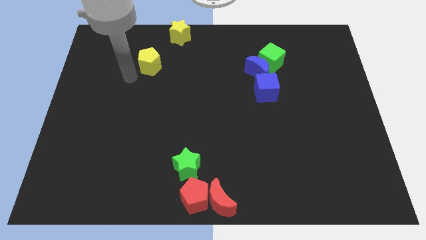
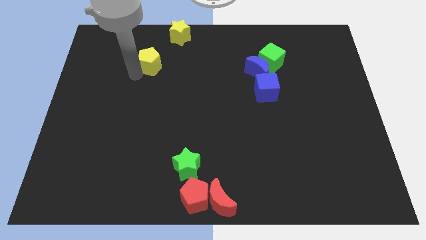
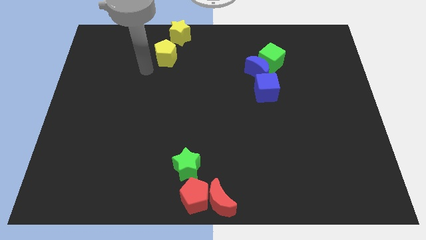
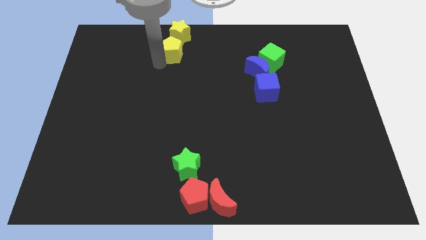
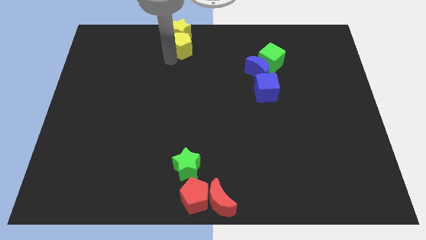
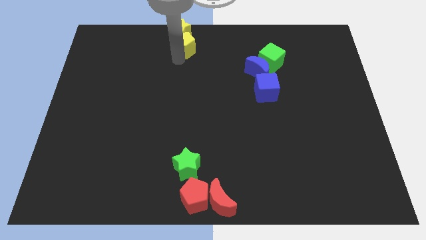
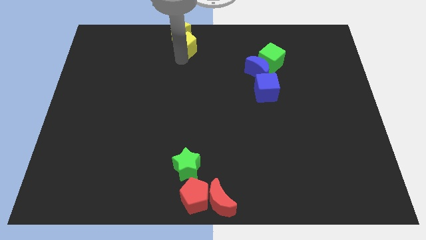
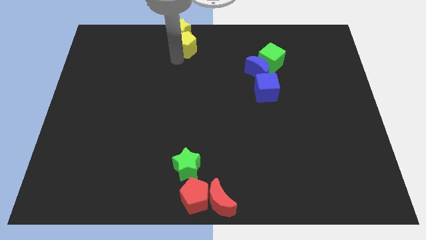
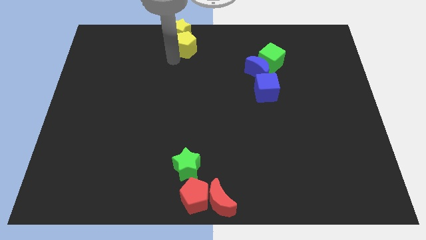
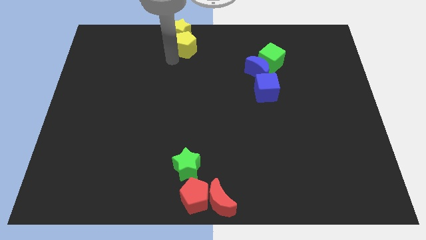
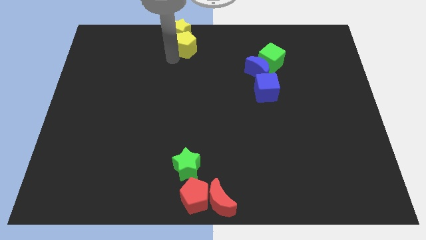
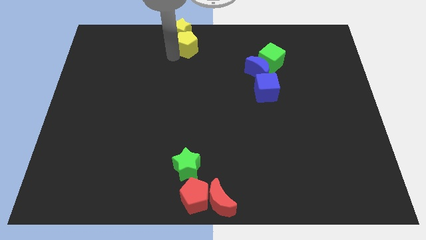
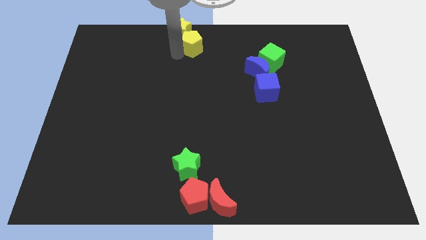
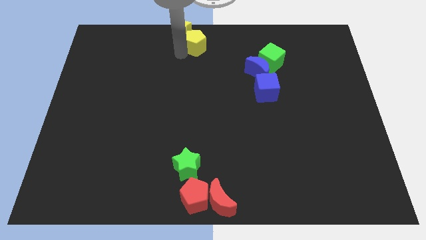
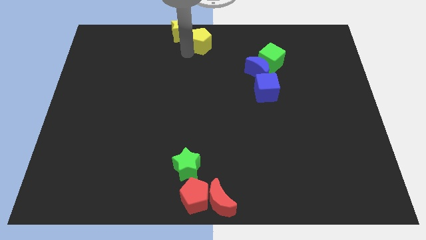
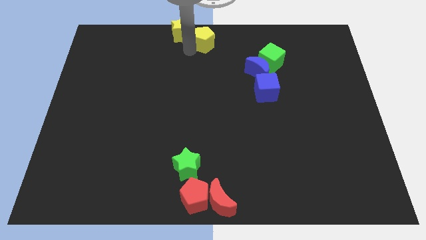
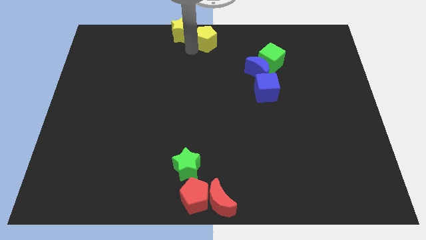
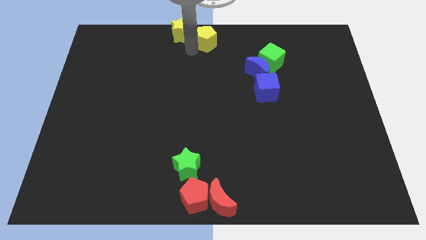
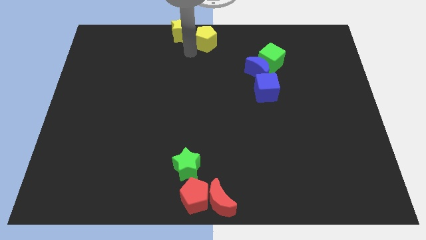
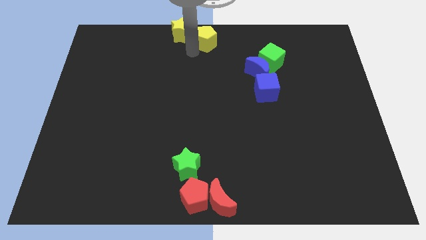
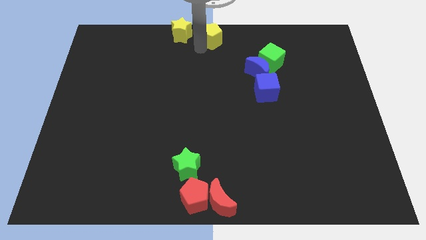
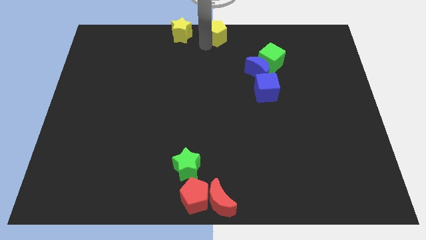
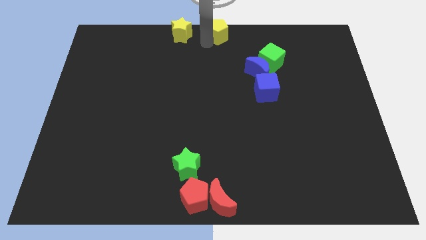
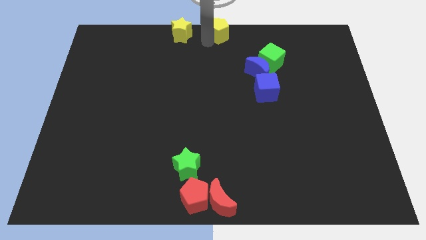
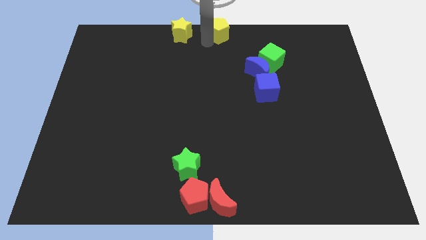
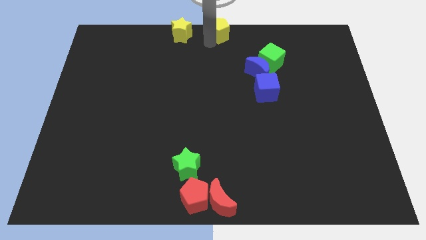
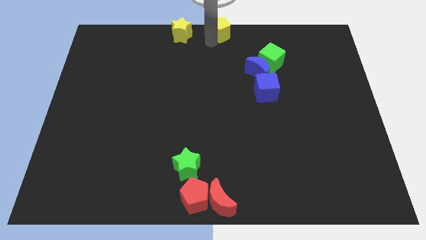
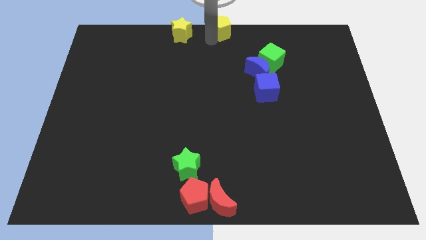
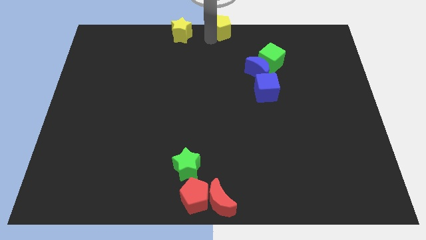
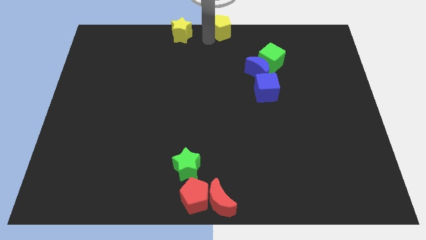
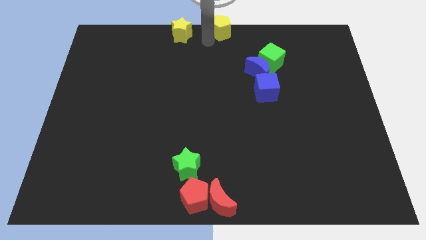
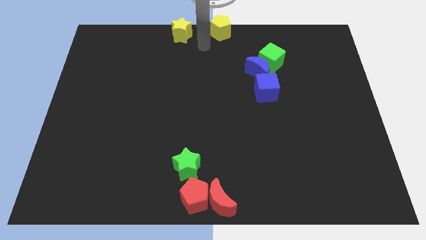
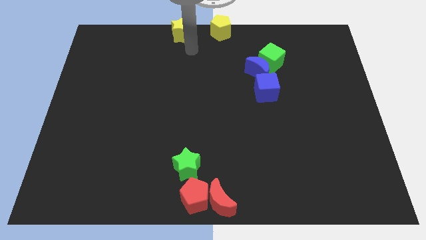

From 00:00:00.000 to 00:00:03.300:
move the yellow pentagon to the top center of the board

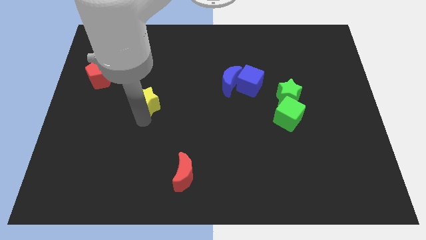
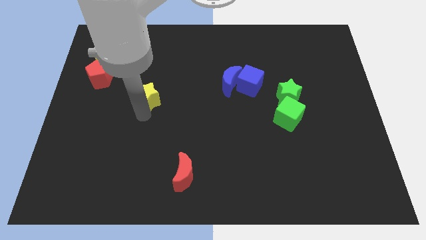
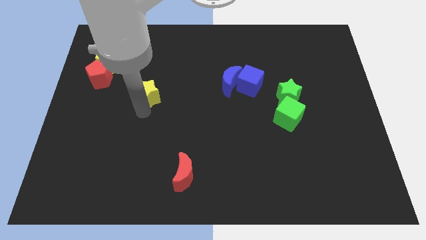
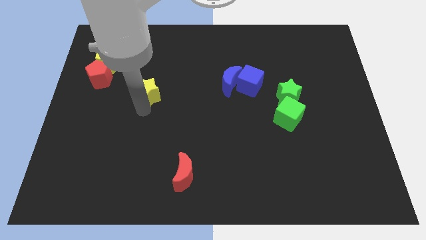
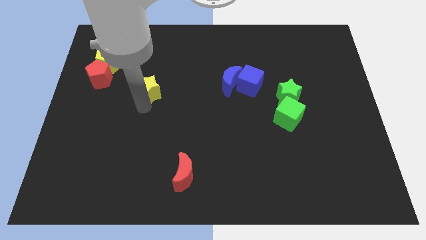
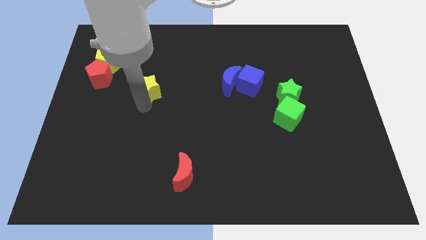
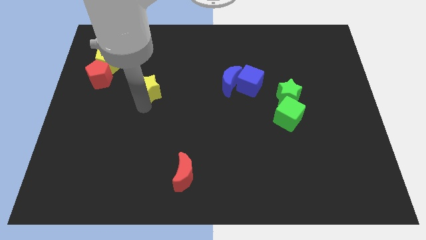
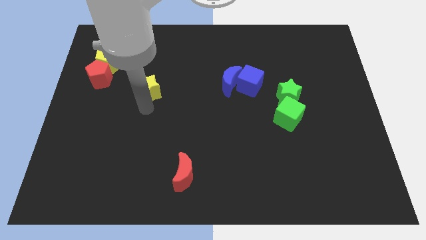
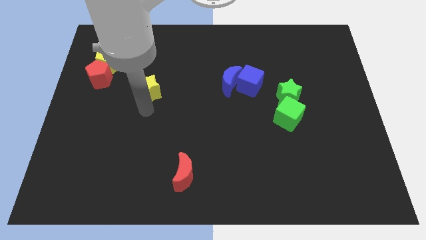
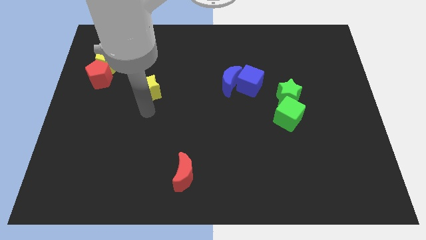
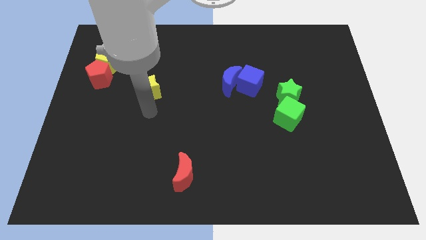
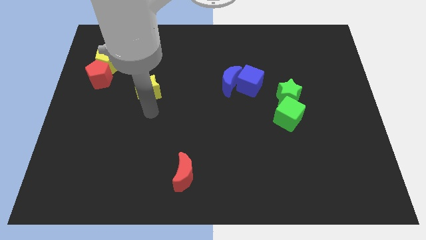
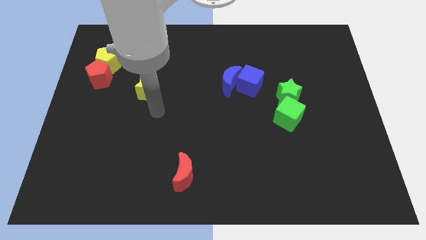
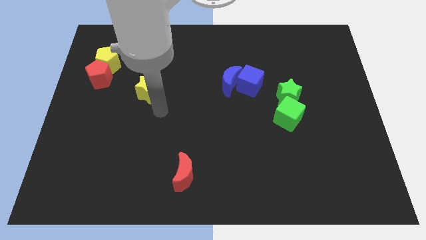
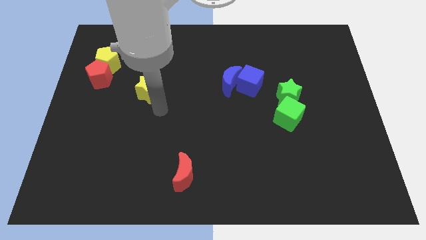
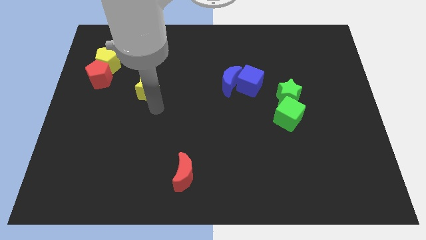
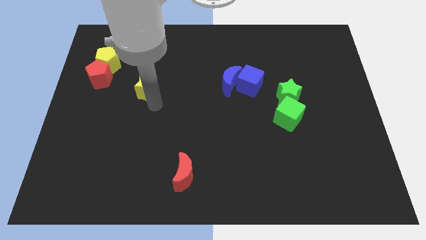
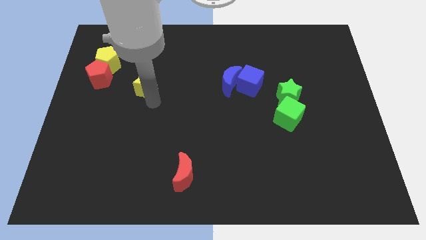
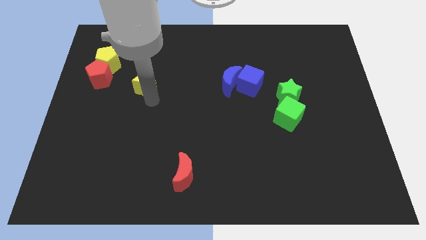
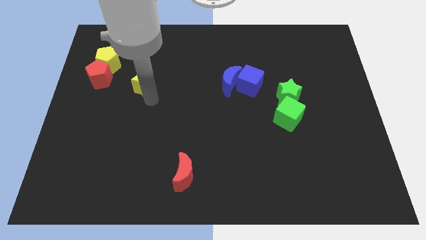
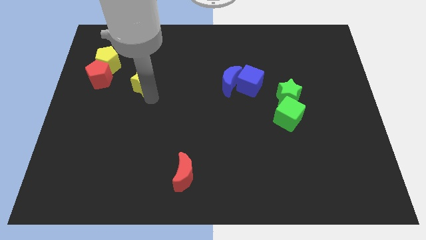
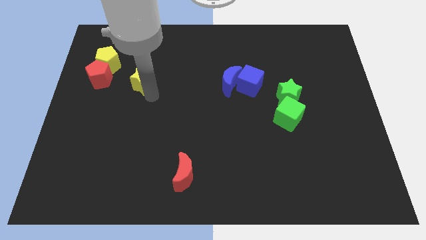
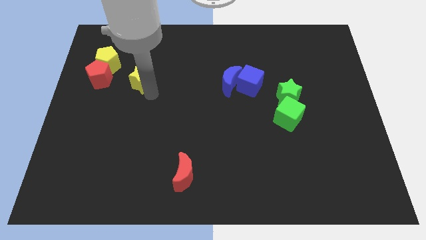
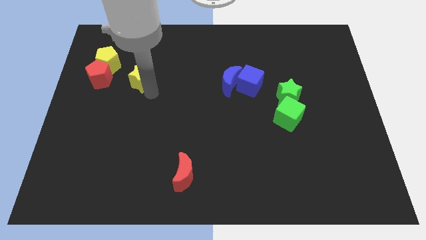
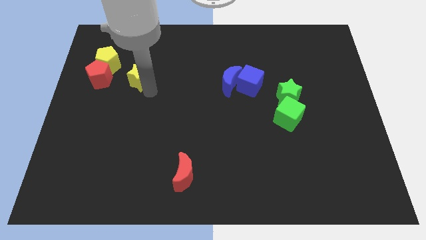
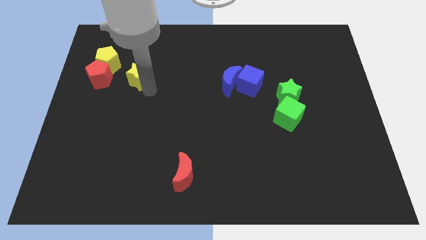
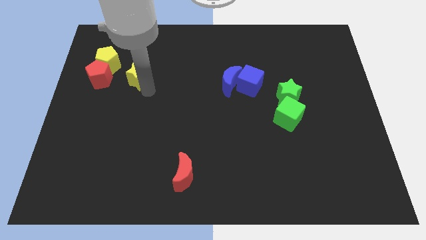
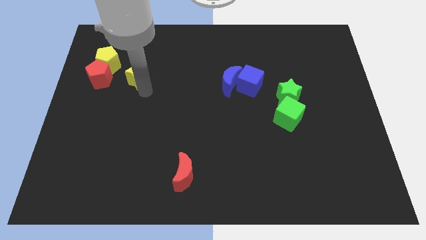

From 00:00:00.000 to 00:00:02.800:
place the yellow star to the right of the red pentagon

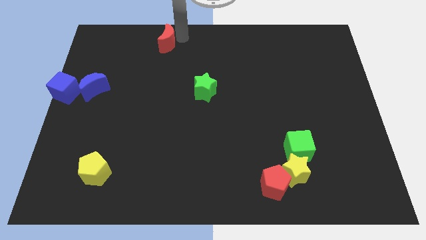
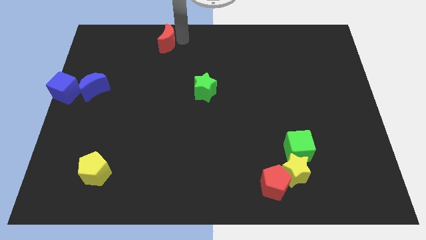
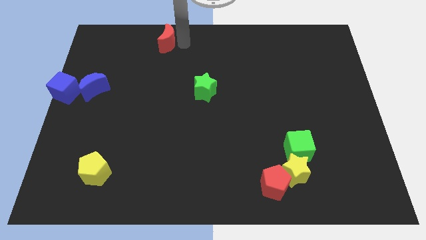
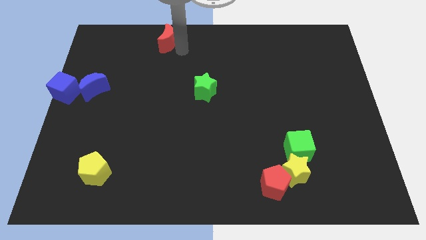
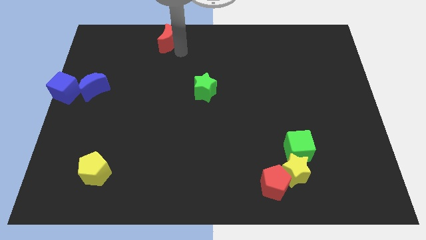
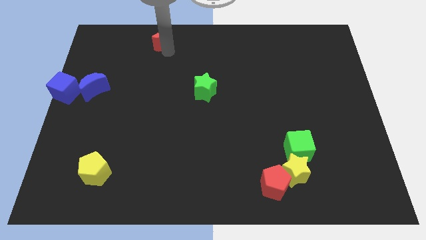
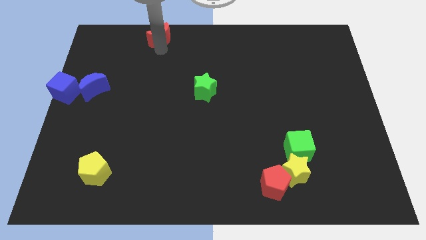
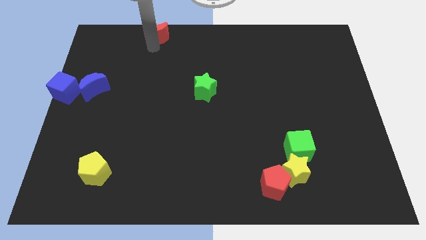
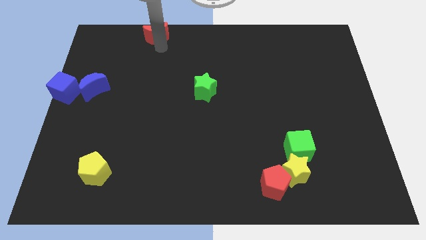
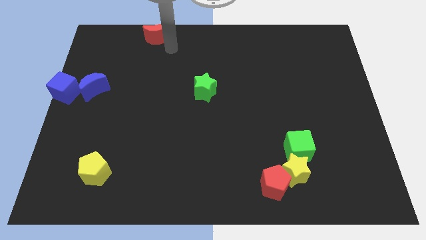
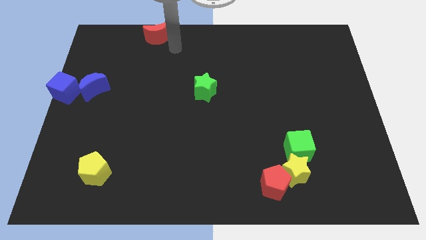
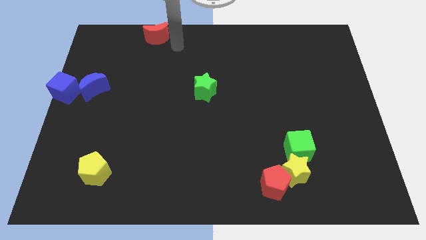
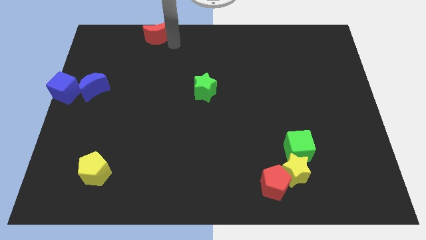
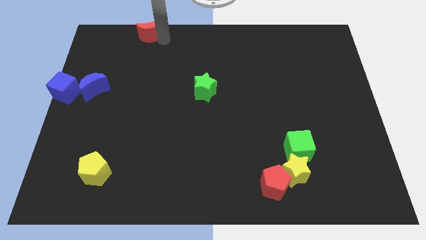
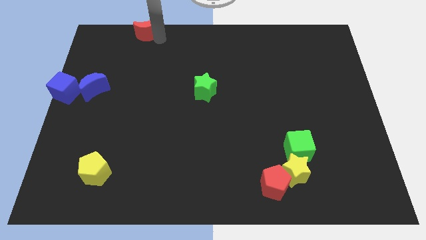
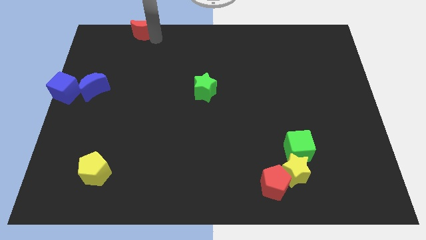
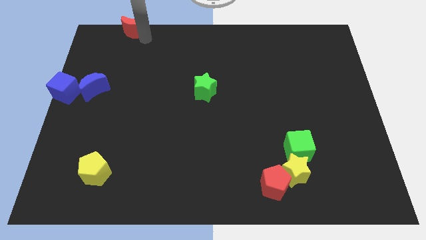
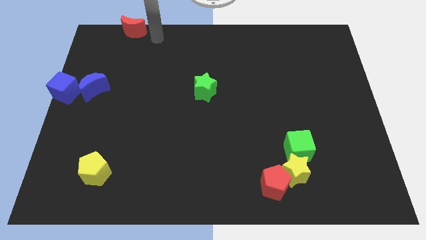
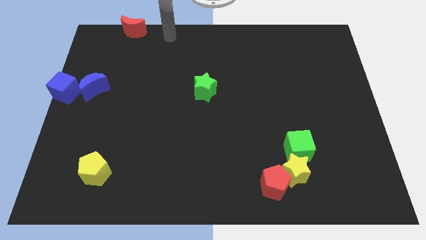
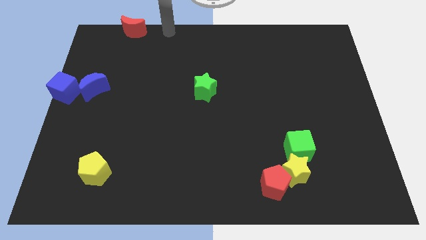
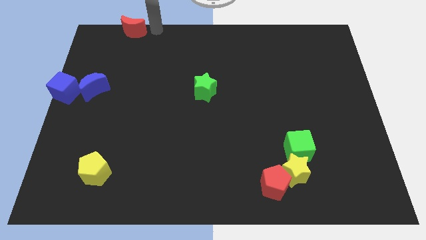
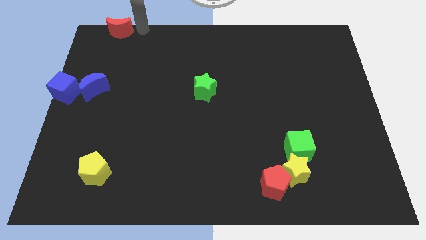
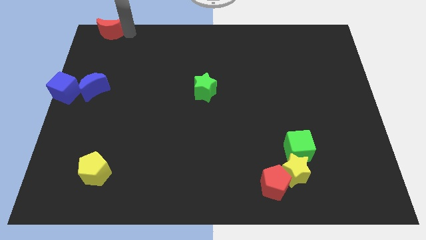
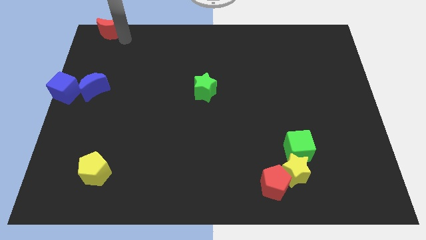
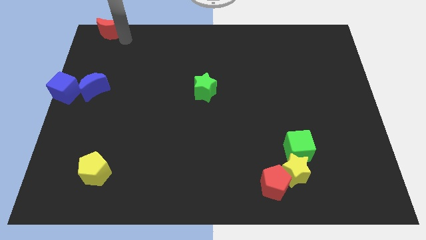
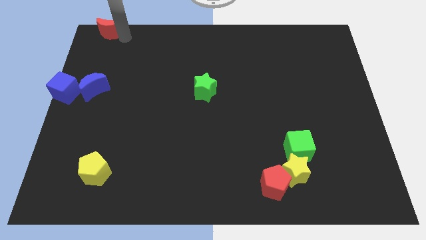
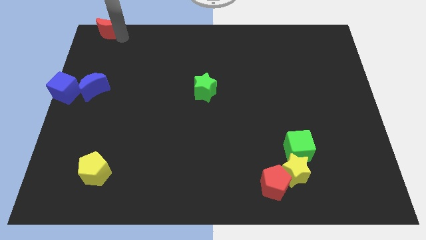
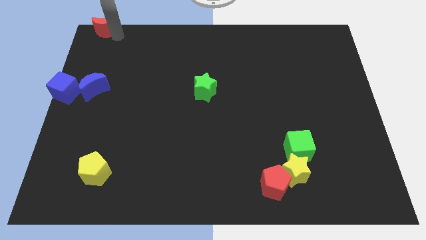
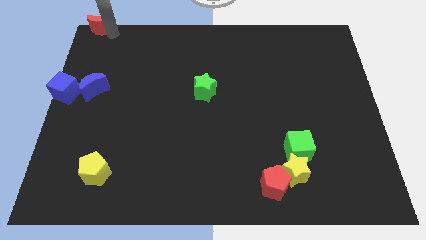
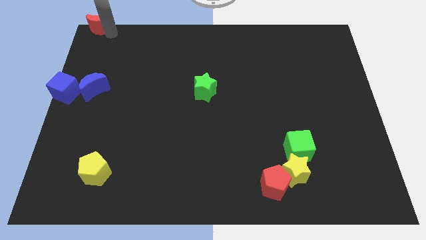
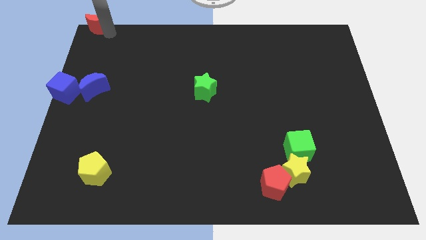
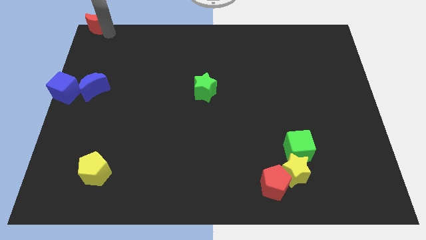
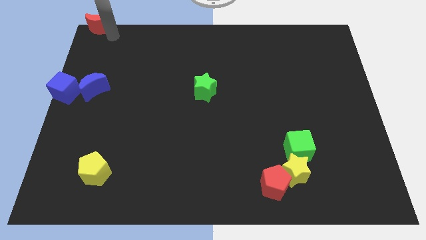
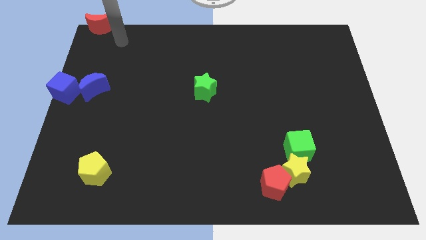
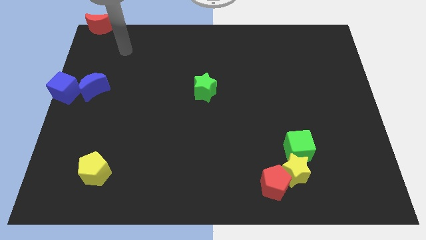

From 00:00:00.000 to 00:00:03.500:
place the red moon to the top left corner
